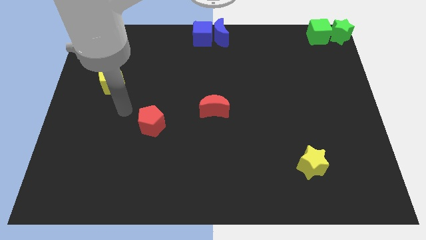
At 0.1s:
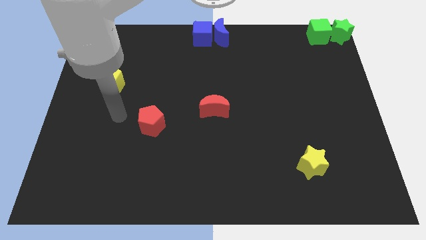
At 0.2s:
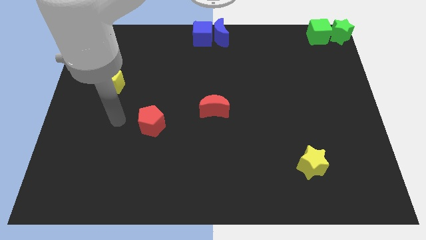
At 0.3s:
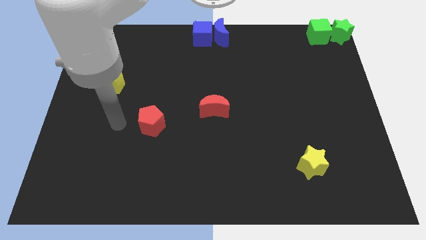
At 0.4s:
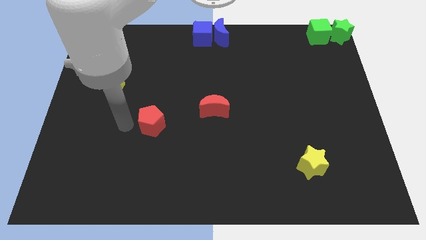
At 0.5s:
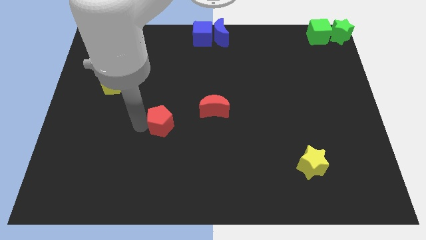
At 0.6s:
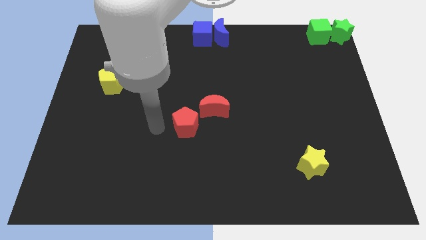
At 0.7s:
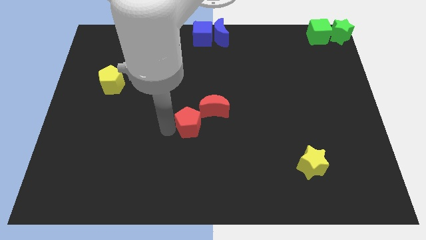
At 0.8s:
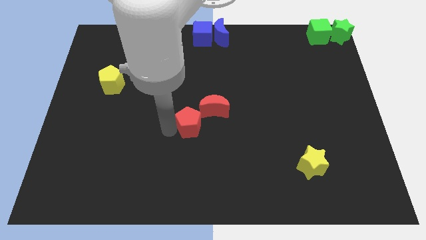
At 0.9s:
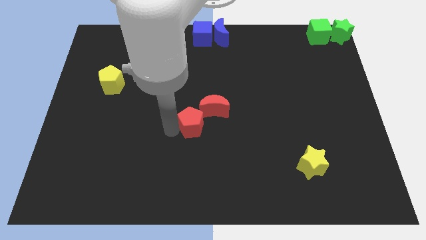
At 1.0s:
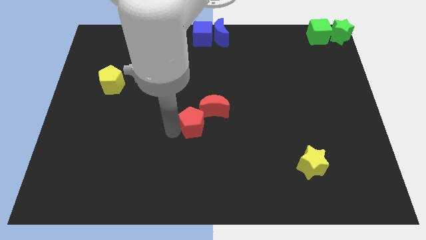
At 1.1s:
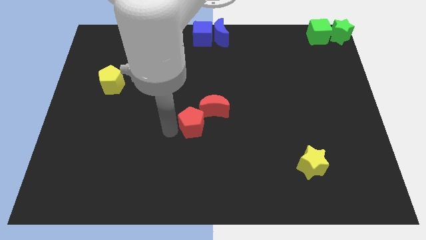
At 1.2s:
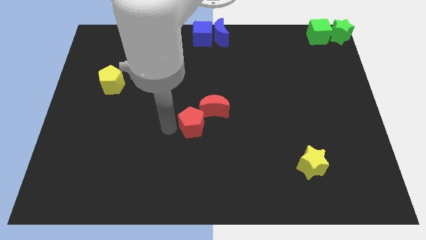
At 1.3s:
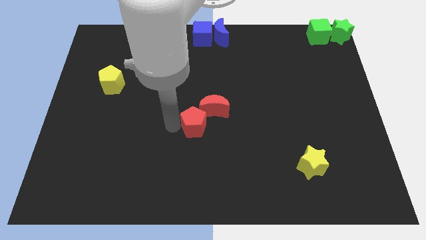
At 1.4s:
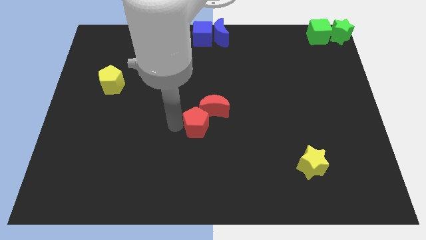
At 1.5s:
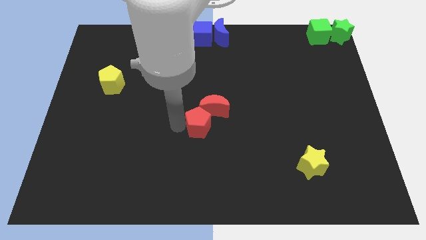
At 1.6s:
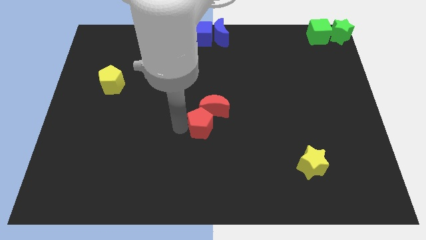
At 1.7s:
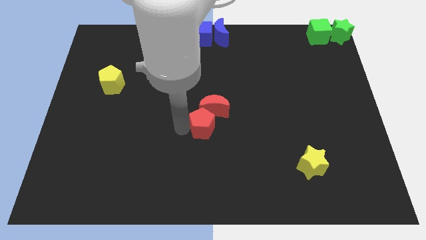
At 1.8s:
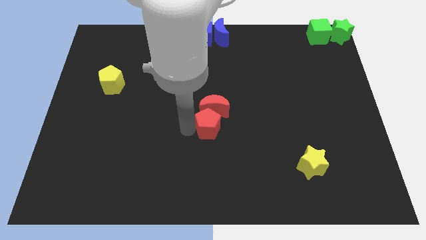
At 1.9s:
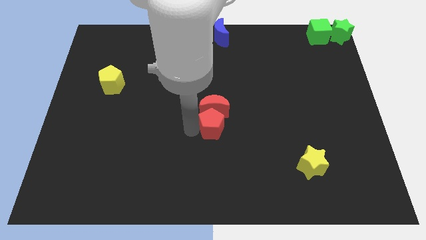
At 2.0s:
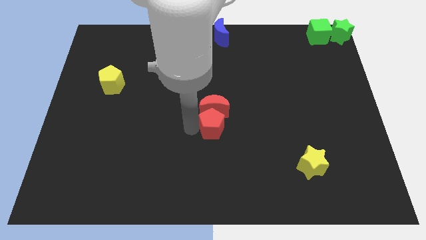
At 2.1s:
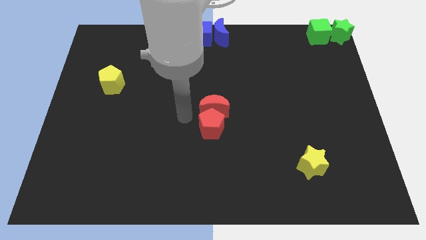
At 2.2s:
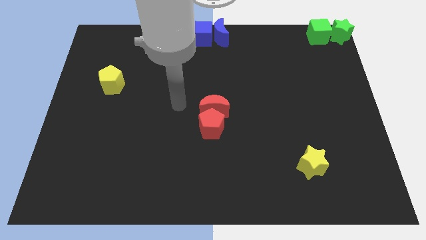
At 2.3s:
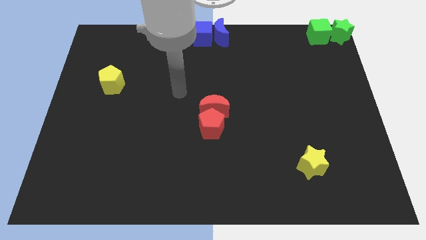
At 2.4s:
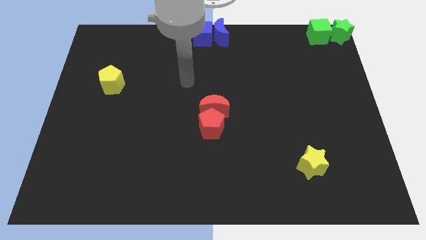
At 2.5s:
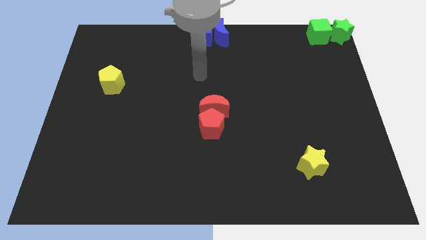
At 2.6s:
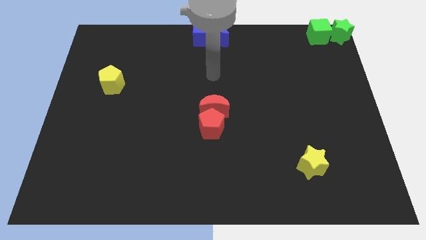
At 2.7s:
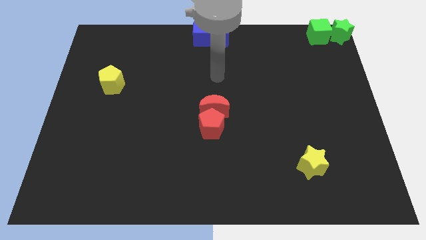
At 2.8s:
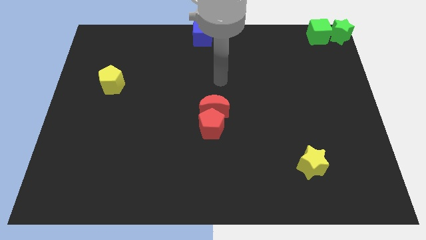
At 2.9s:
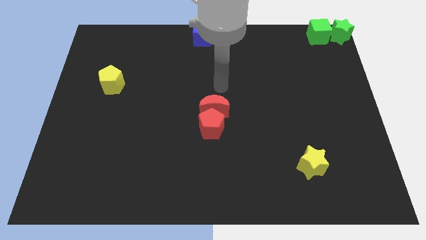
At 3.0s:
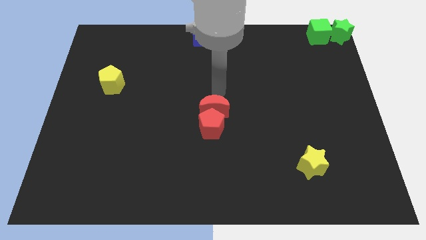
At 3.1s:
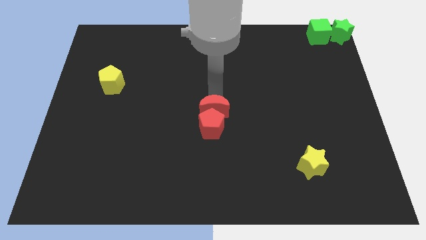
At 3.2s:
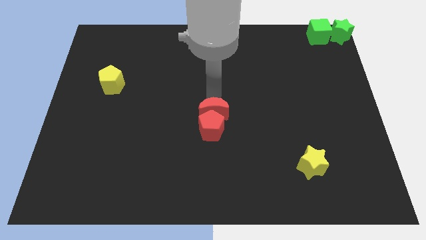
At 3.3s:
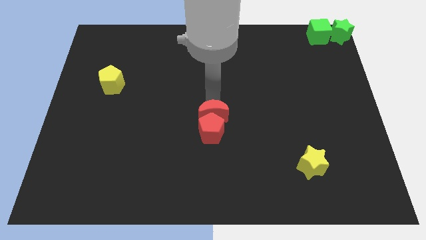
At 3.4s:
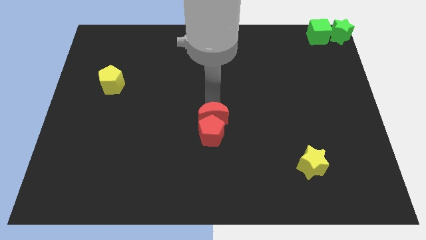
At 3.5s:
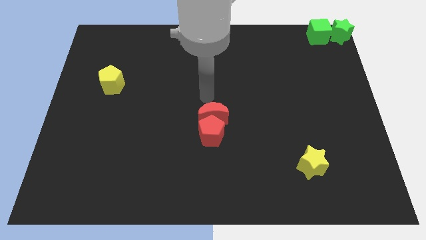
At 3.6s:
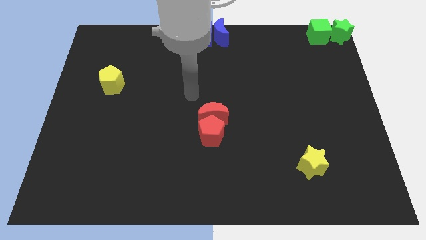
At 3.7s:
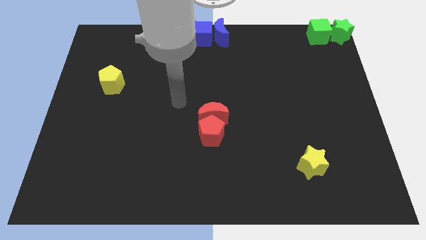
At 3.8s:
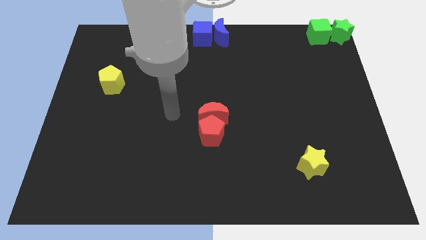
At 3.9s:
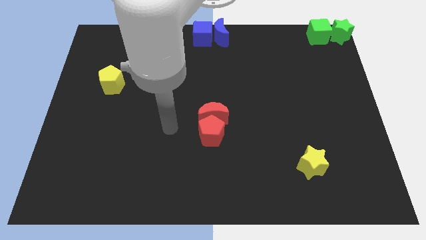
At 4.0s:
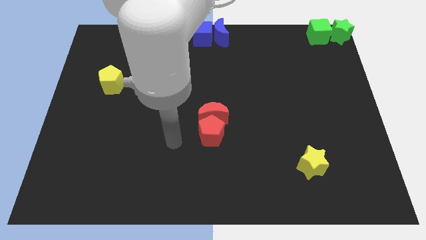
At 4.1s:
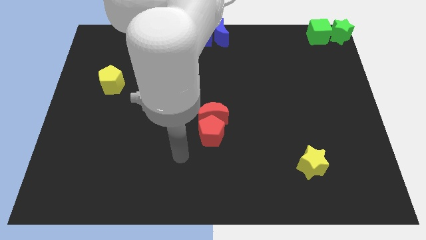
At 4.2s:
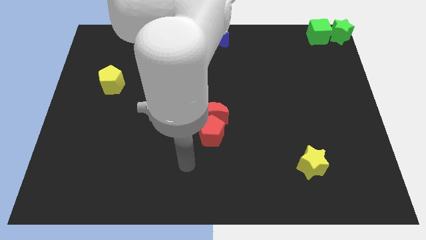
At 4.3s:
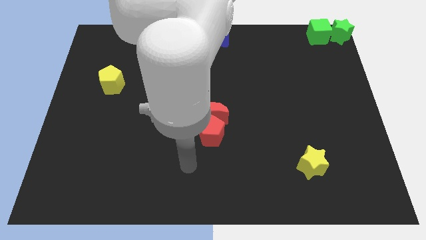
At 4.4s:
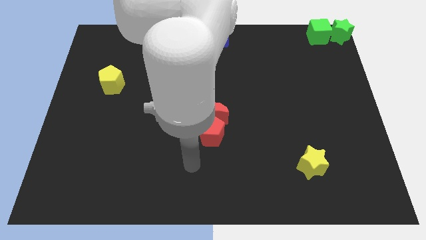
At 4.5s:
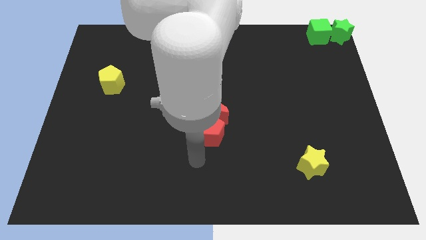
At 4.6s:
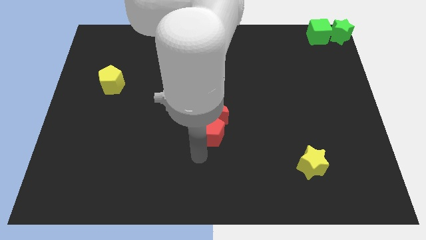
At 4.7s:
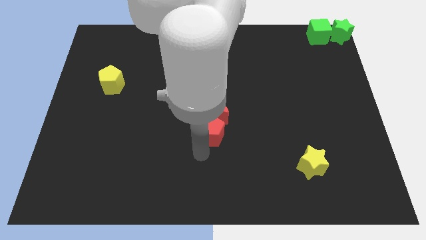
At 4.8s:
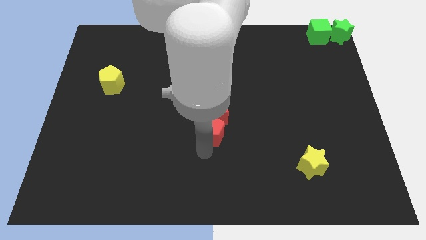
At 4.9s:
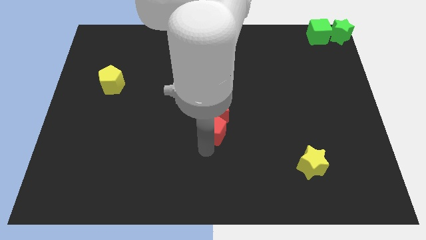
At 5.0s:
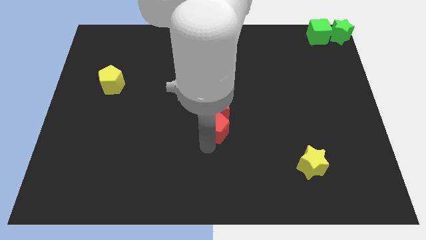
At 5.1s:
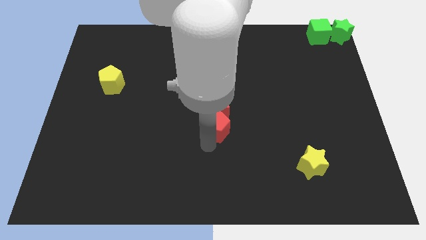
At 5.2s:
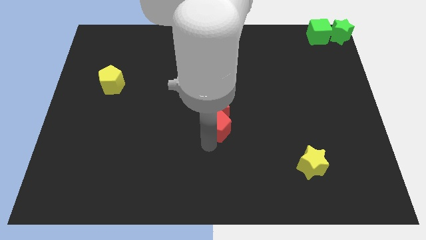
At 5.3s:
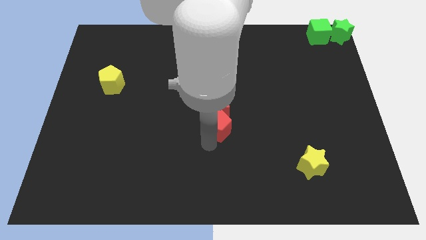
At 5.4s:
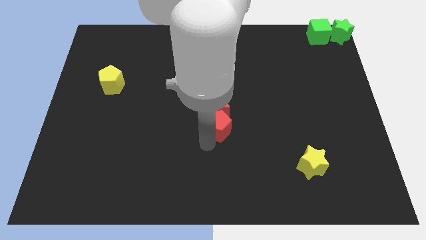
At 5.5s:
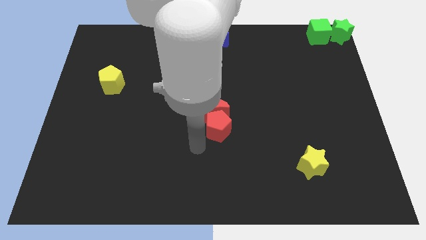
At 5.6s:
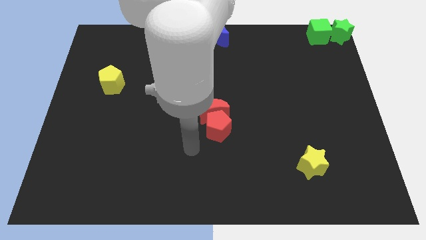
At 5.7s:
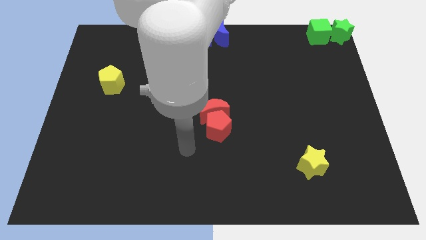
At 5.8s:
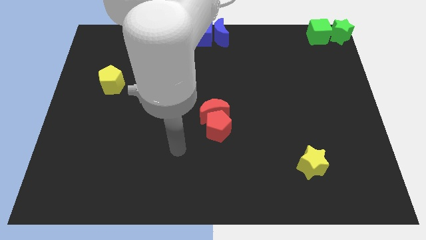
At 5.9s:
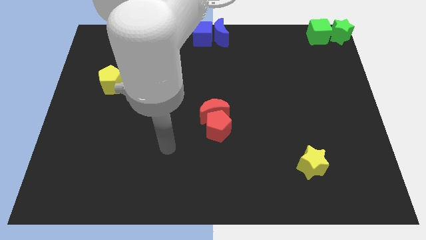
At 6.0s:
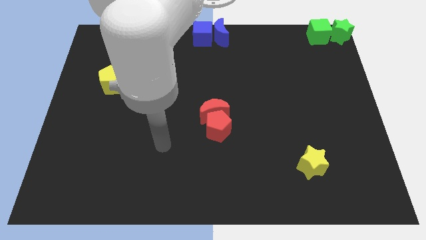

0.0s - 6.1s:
place the group of red blocks at the center

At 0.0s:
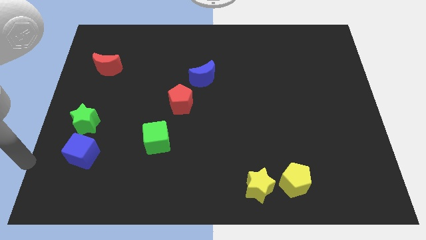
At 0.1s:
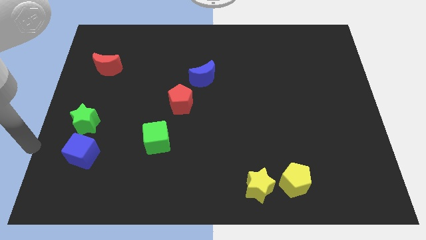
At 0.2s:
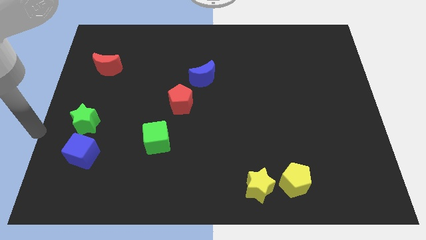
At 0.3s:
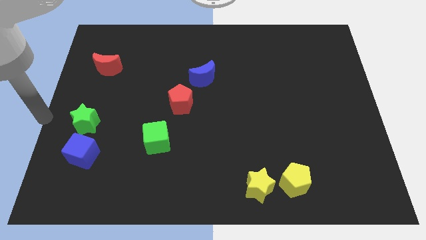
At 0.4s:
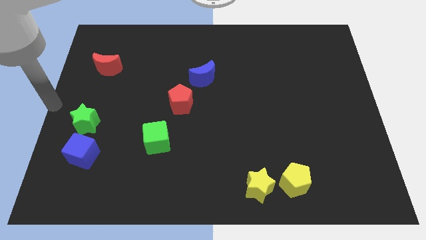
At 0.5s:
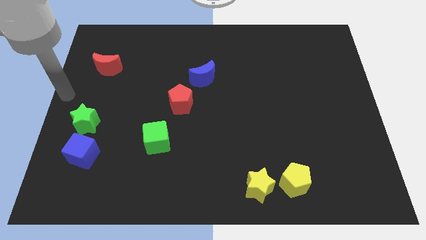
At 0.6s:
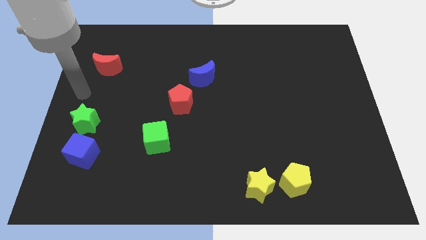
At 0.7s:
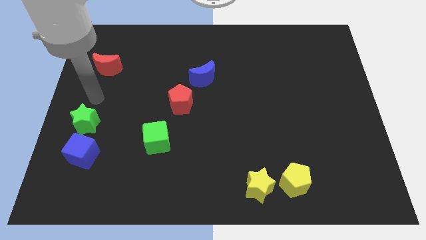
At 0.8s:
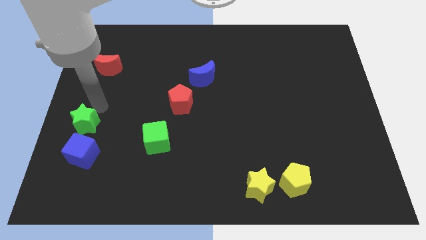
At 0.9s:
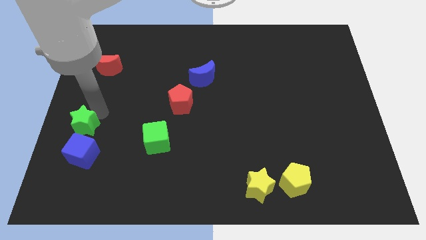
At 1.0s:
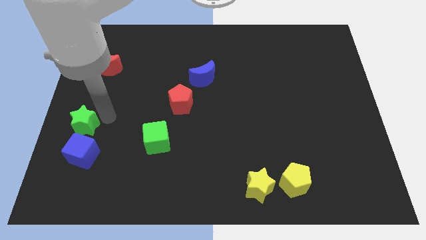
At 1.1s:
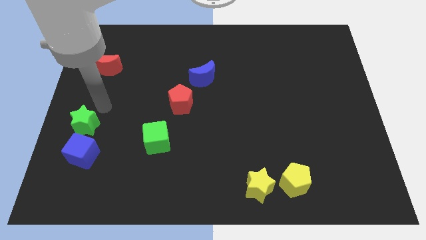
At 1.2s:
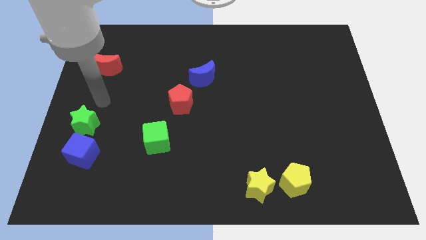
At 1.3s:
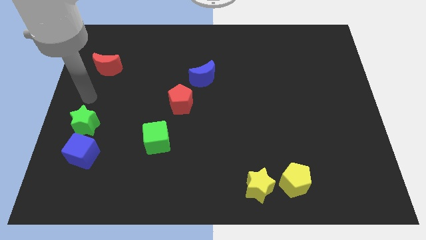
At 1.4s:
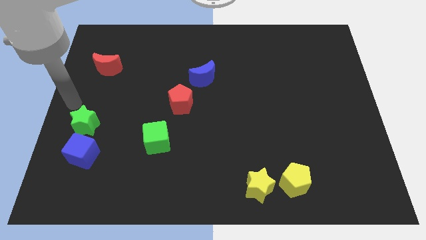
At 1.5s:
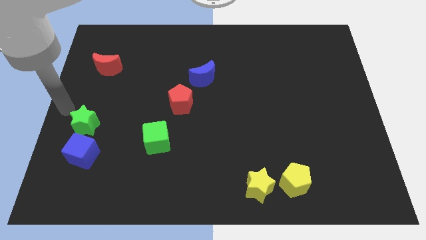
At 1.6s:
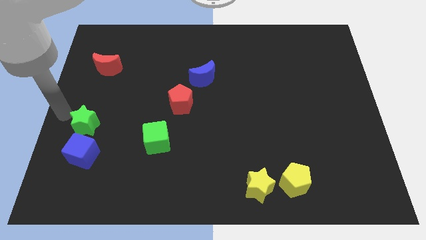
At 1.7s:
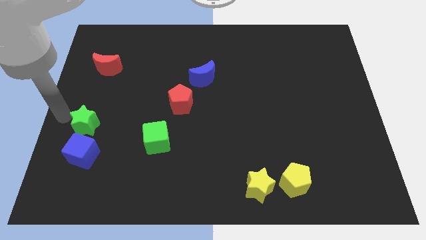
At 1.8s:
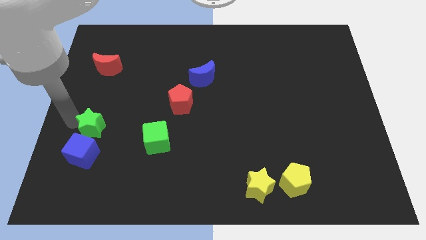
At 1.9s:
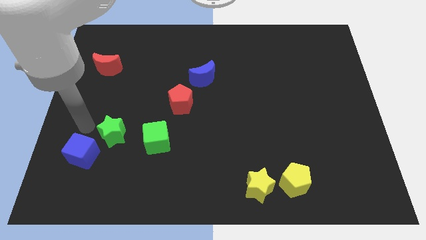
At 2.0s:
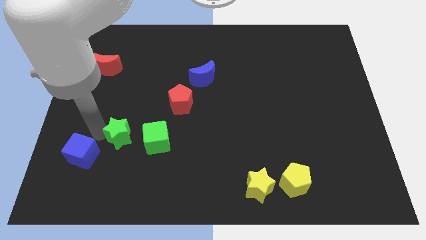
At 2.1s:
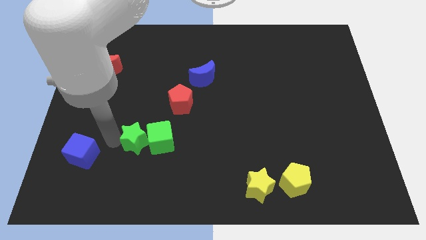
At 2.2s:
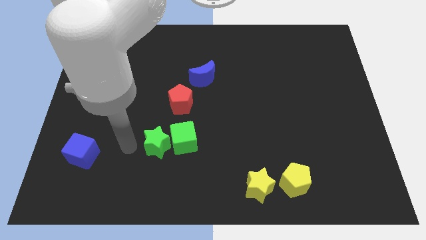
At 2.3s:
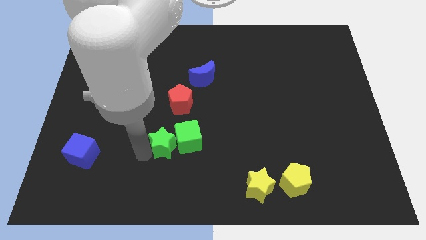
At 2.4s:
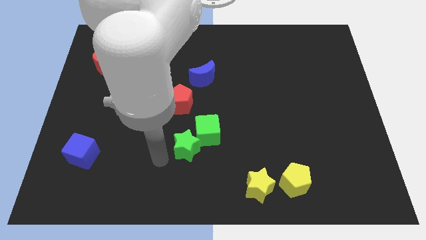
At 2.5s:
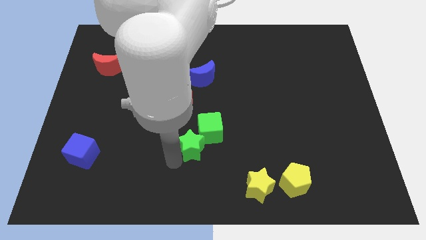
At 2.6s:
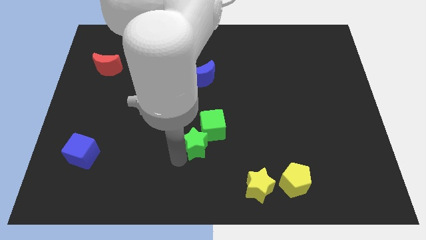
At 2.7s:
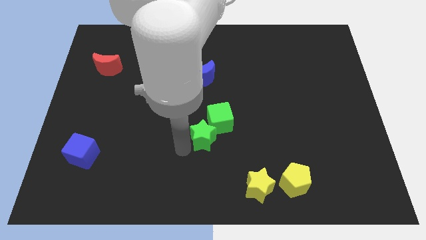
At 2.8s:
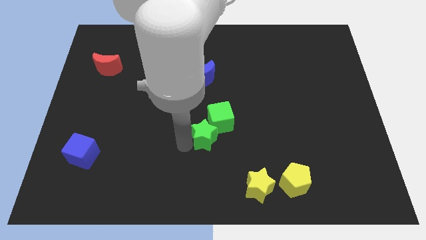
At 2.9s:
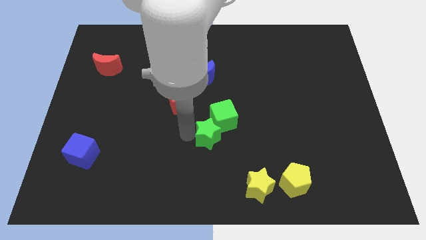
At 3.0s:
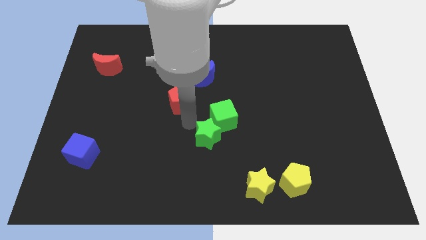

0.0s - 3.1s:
move the green star along the green cube to the bottom right to the red pentagon
